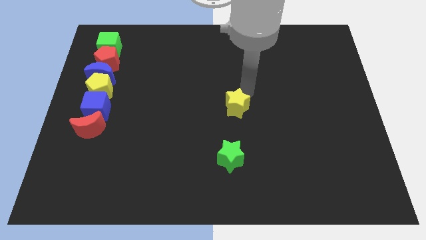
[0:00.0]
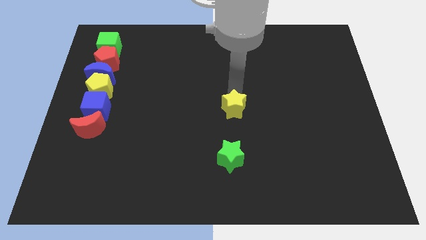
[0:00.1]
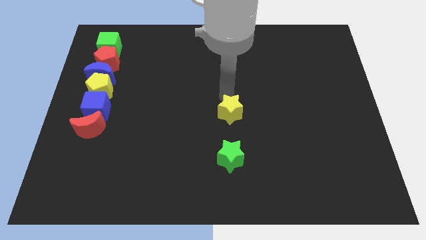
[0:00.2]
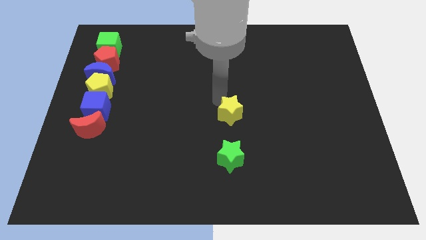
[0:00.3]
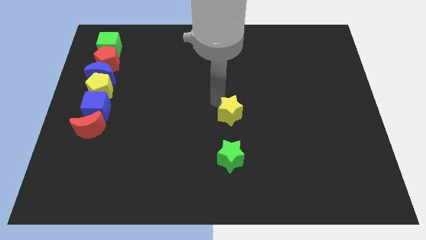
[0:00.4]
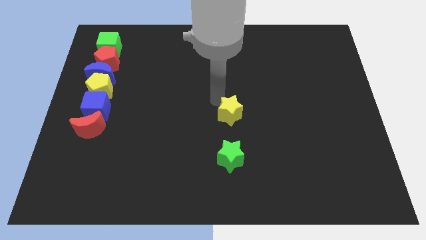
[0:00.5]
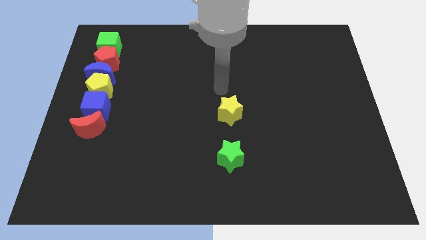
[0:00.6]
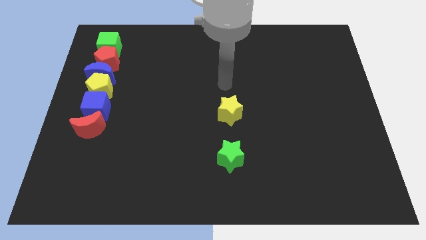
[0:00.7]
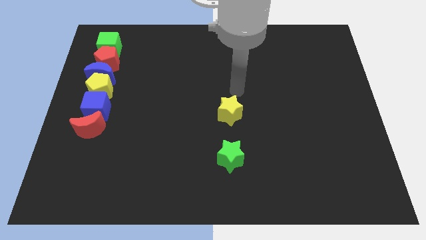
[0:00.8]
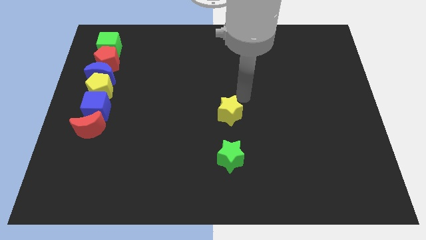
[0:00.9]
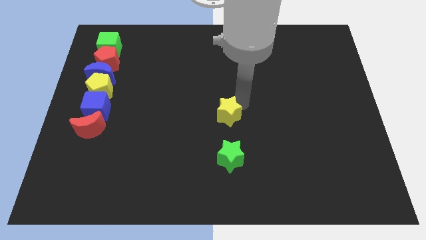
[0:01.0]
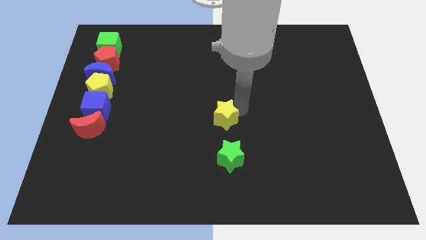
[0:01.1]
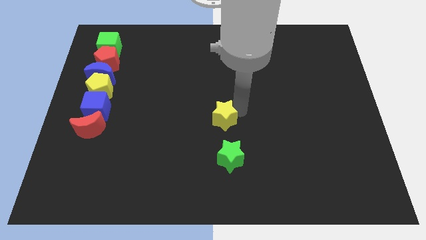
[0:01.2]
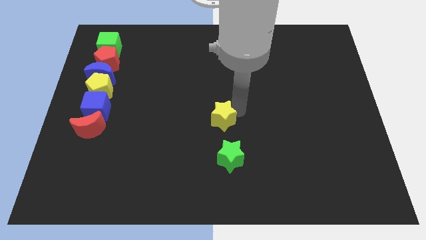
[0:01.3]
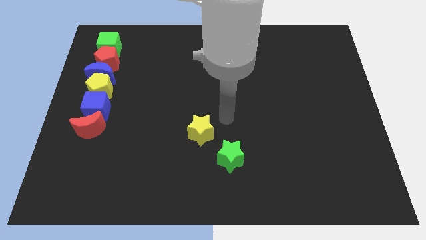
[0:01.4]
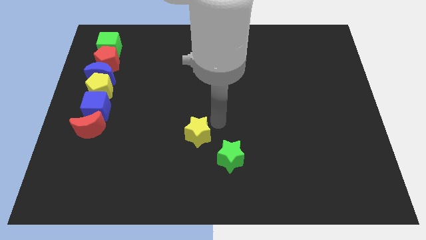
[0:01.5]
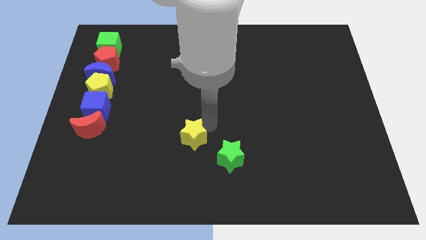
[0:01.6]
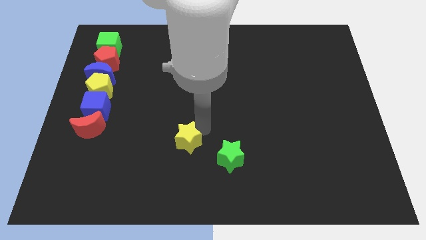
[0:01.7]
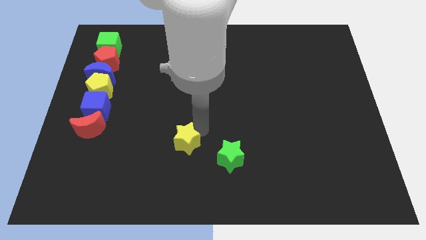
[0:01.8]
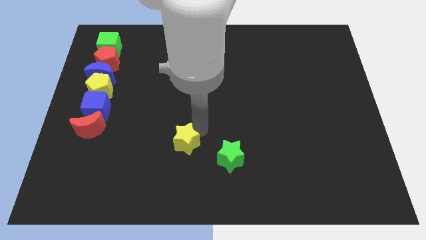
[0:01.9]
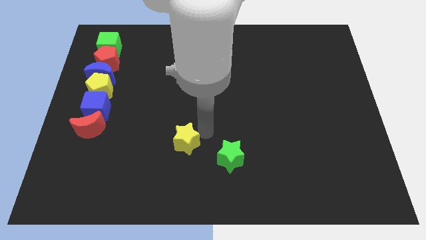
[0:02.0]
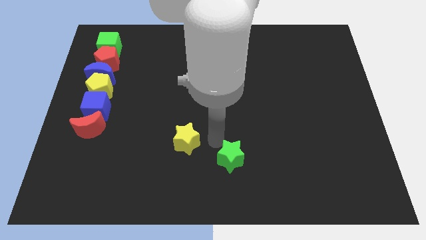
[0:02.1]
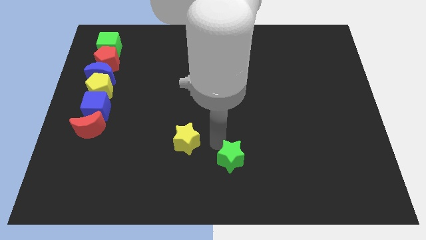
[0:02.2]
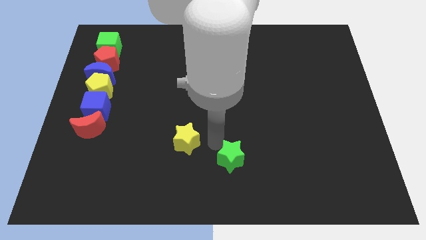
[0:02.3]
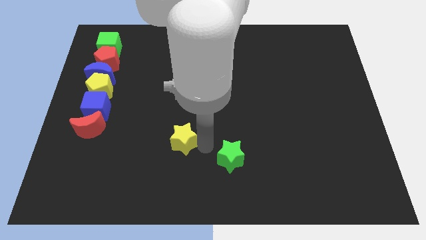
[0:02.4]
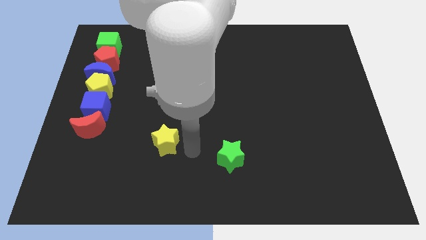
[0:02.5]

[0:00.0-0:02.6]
push the yellow star diagonally to the top left of the green star

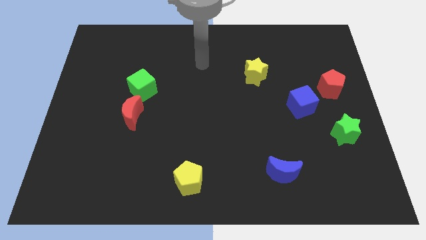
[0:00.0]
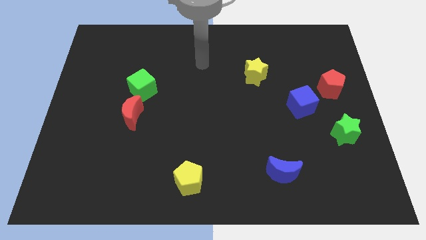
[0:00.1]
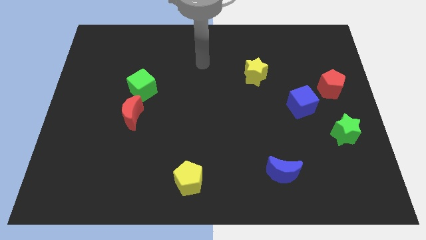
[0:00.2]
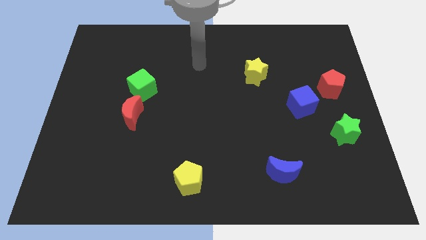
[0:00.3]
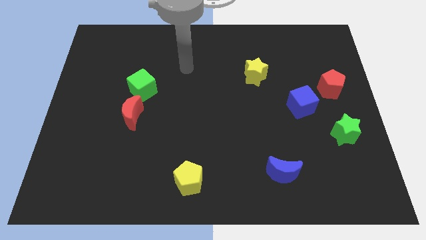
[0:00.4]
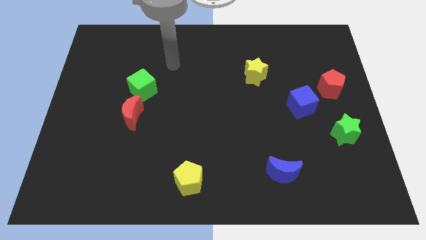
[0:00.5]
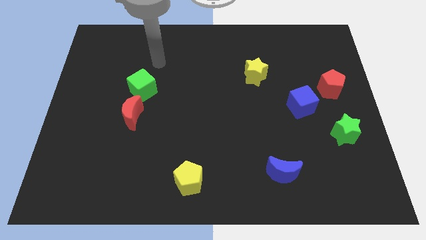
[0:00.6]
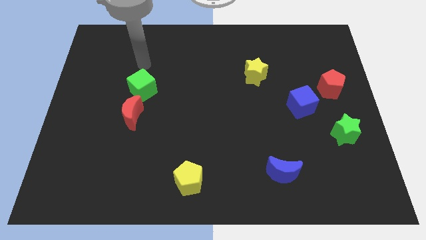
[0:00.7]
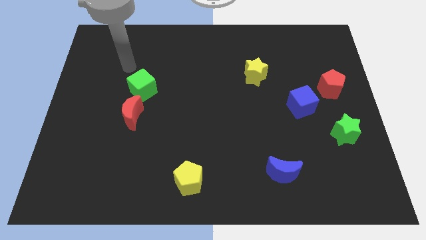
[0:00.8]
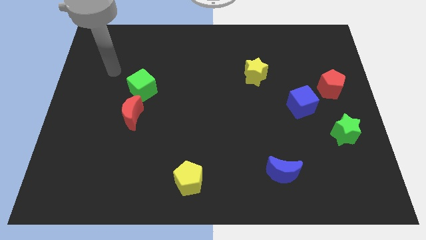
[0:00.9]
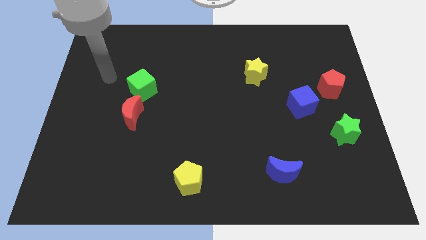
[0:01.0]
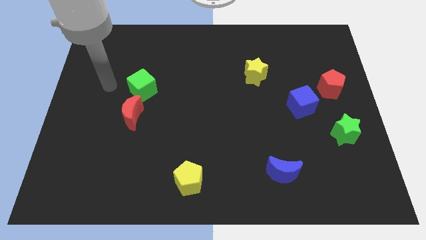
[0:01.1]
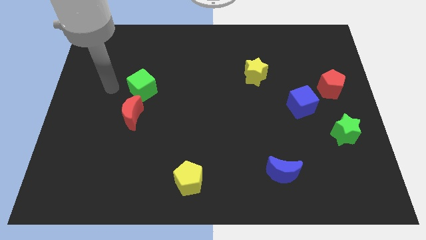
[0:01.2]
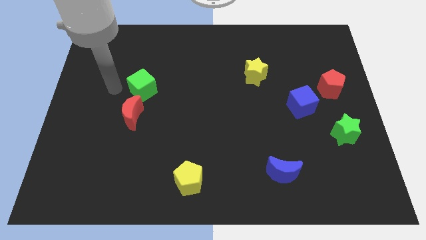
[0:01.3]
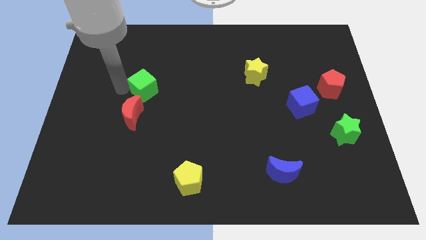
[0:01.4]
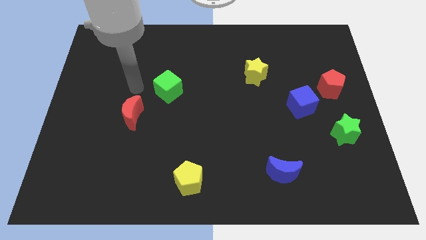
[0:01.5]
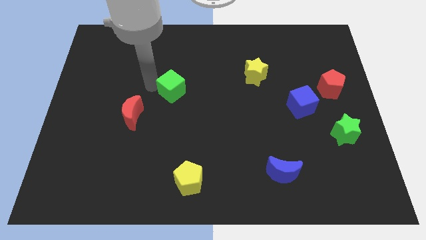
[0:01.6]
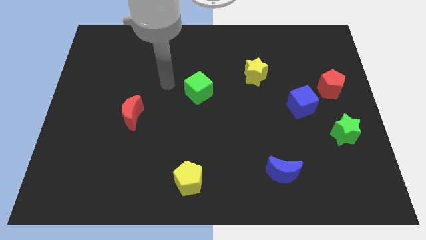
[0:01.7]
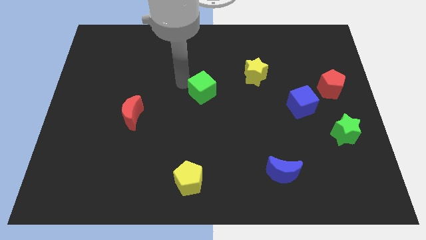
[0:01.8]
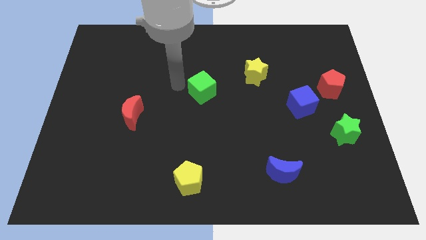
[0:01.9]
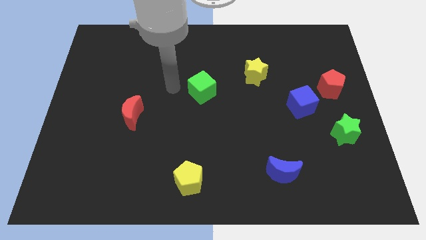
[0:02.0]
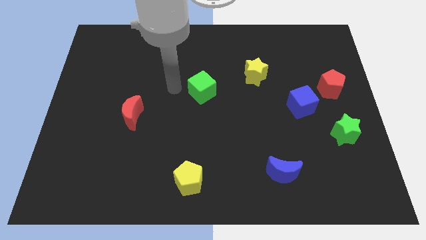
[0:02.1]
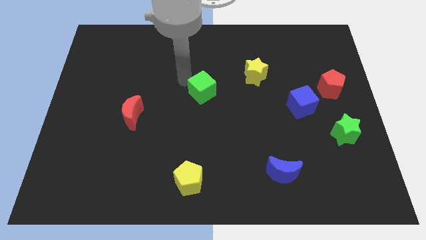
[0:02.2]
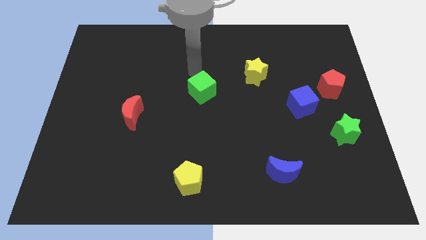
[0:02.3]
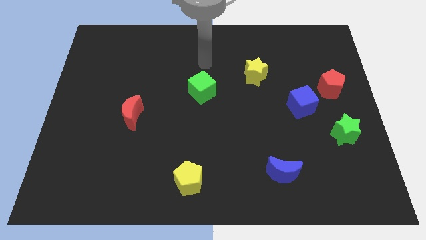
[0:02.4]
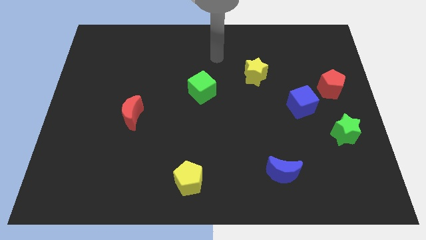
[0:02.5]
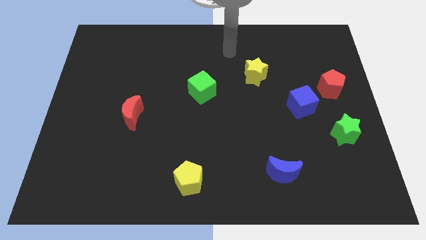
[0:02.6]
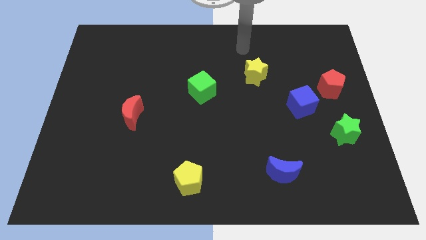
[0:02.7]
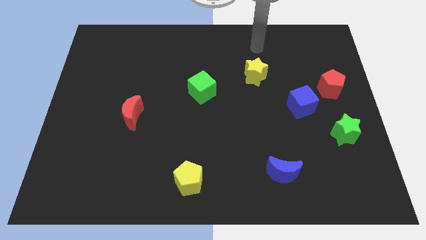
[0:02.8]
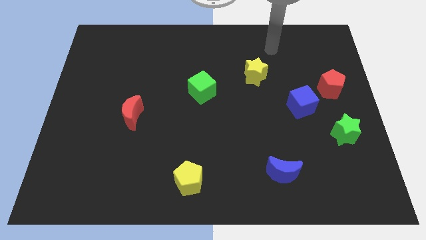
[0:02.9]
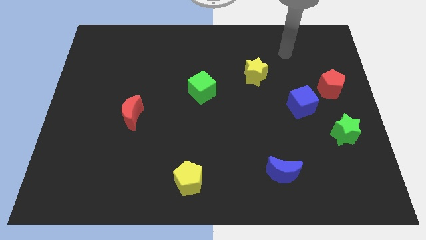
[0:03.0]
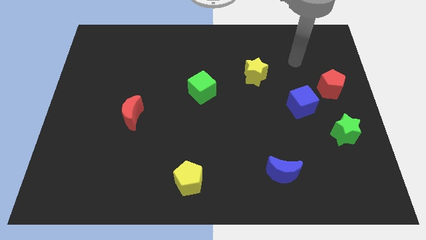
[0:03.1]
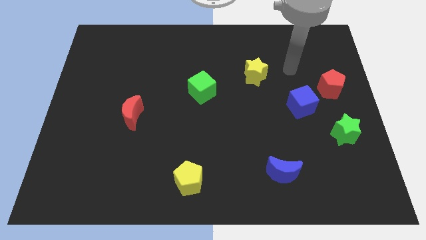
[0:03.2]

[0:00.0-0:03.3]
separate the green cube from the red crescent

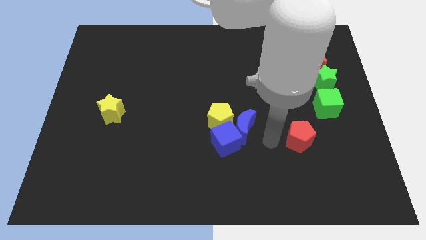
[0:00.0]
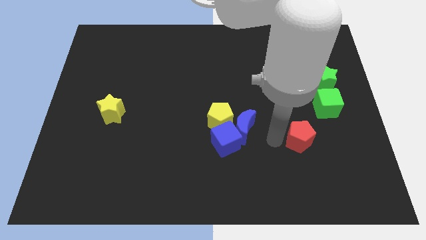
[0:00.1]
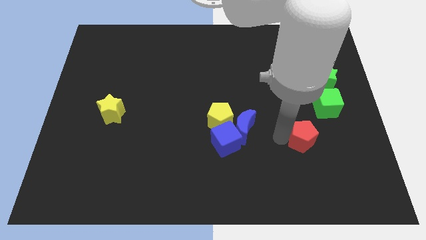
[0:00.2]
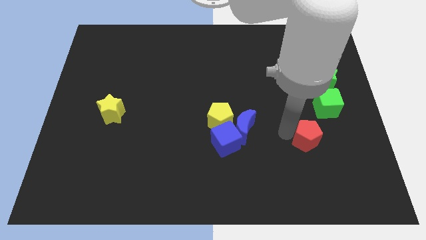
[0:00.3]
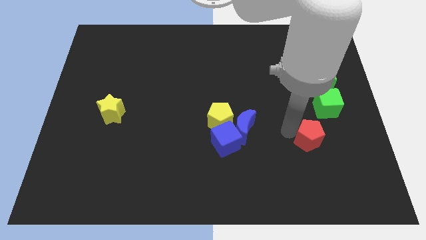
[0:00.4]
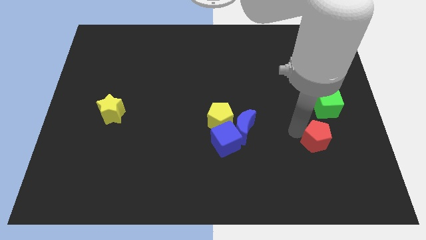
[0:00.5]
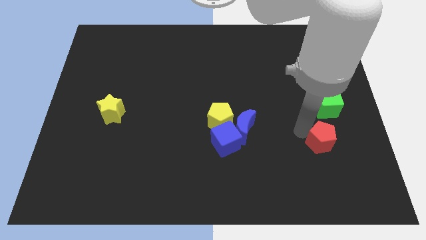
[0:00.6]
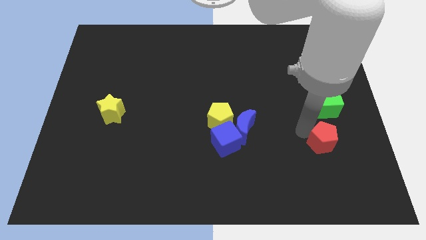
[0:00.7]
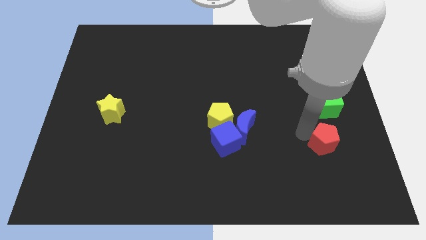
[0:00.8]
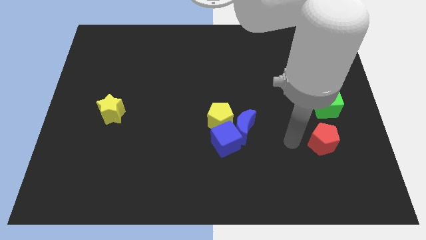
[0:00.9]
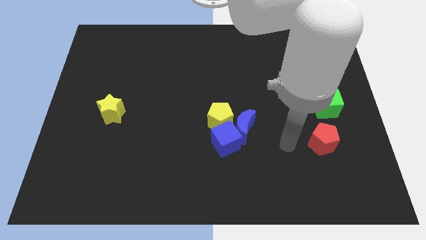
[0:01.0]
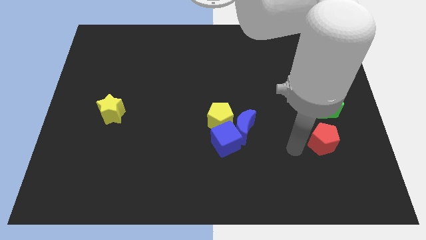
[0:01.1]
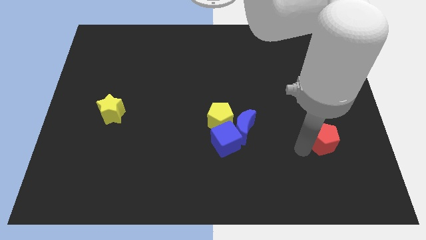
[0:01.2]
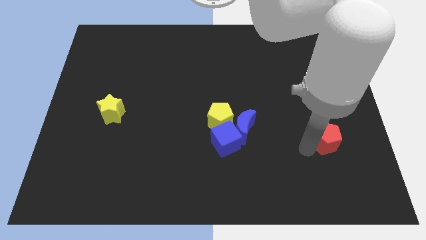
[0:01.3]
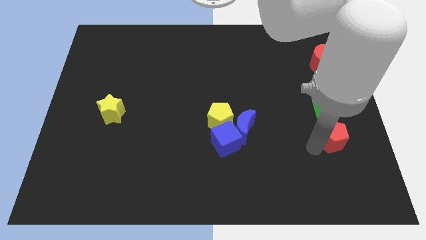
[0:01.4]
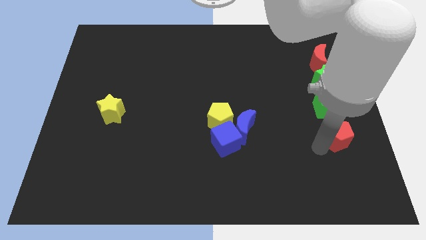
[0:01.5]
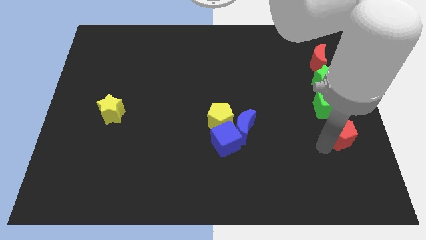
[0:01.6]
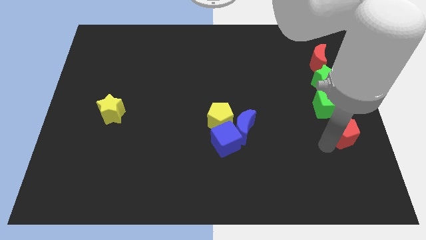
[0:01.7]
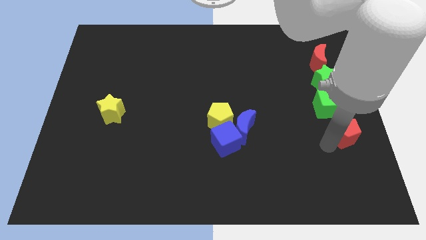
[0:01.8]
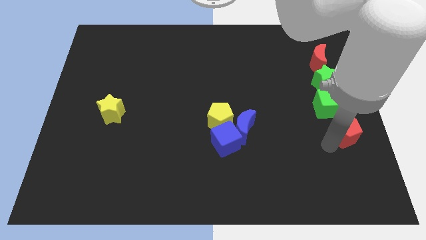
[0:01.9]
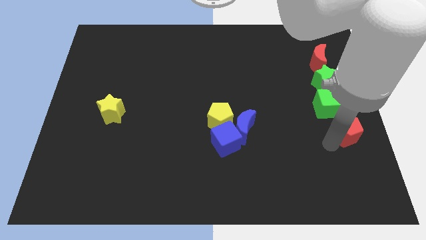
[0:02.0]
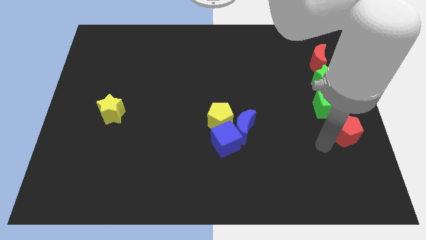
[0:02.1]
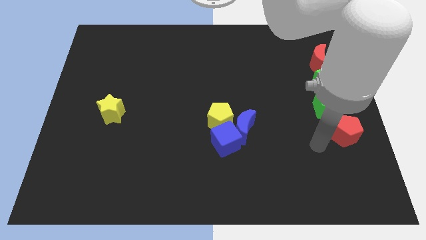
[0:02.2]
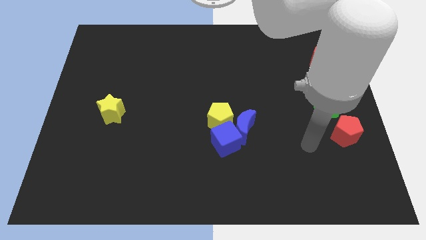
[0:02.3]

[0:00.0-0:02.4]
place red pentagon below the green cube

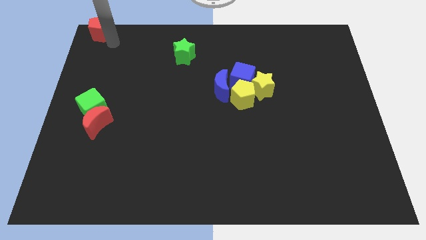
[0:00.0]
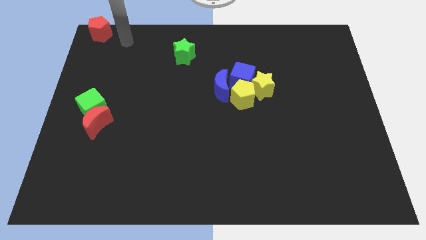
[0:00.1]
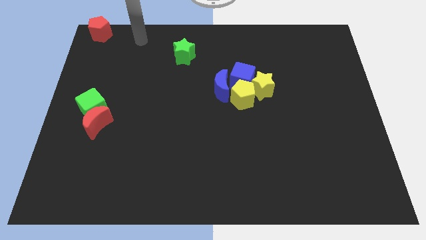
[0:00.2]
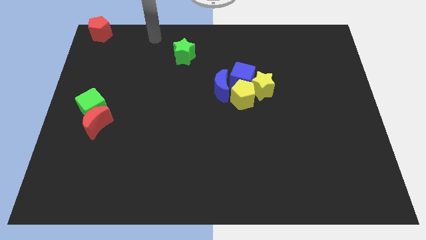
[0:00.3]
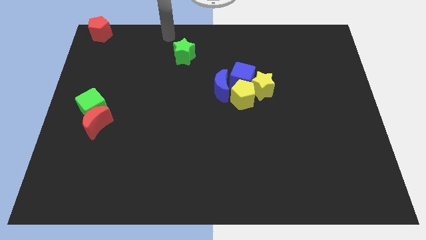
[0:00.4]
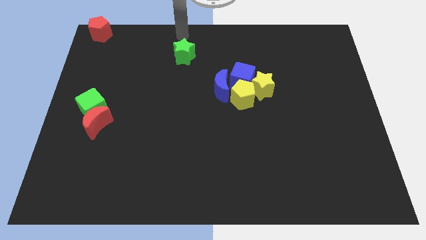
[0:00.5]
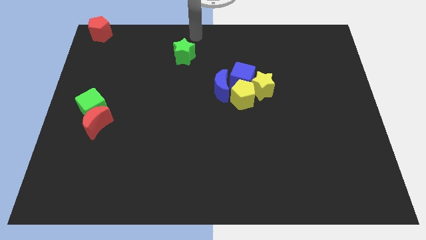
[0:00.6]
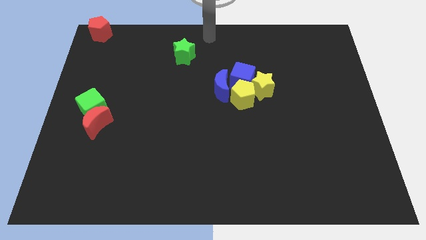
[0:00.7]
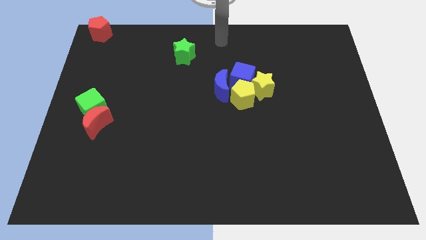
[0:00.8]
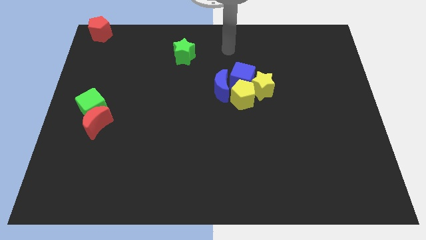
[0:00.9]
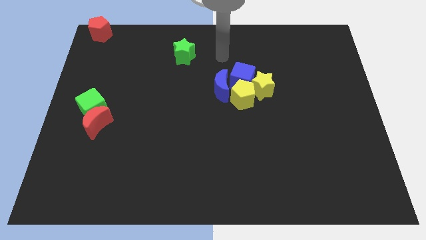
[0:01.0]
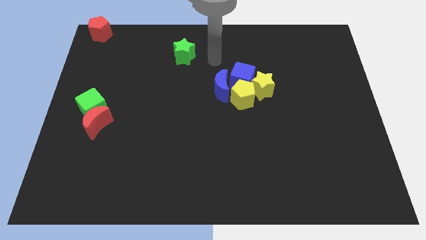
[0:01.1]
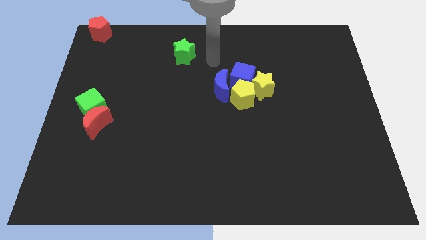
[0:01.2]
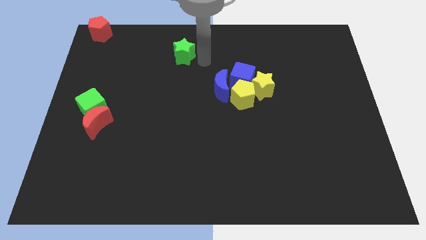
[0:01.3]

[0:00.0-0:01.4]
move your hand away from the red pentagon
